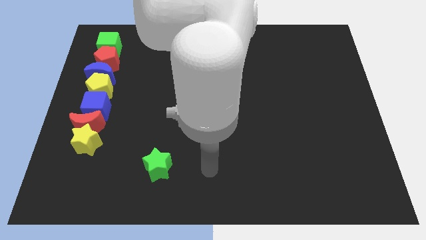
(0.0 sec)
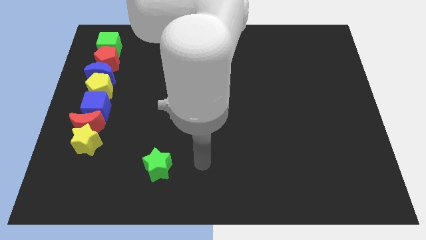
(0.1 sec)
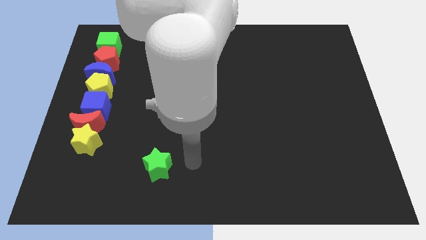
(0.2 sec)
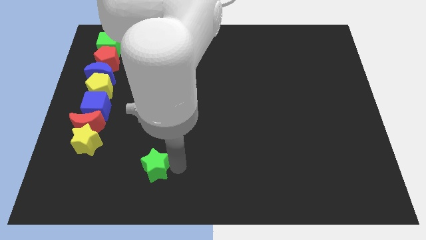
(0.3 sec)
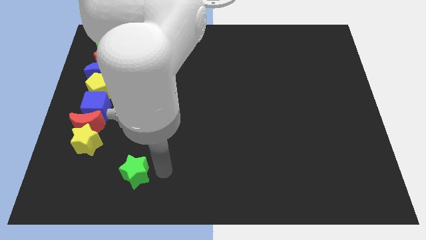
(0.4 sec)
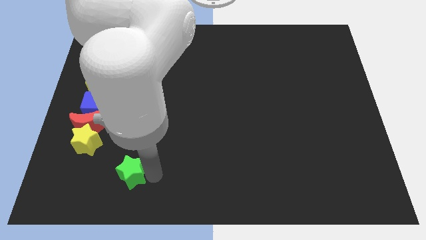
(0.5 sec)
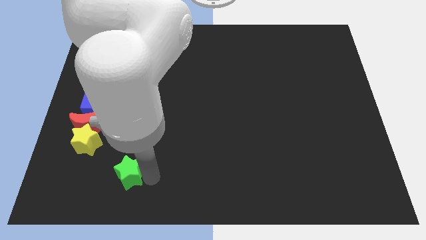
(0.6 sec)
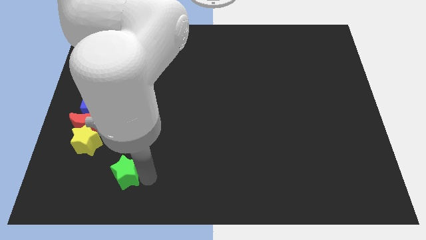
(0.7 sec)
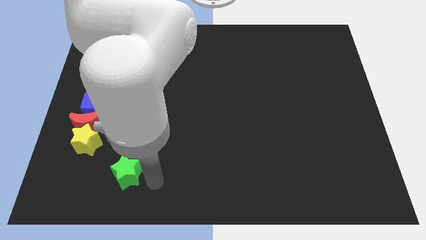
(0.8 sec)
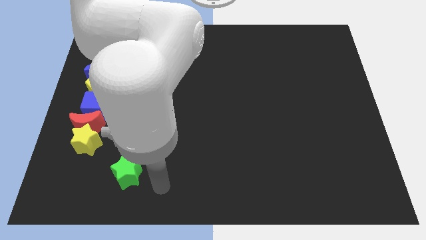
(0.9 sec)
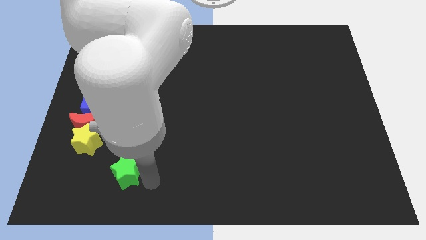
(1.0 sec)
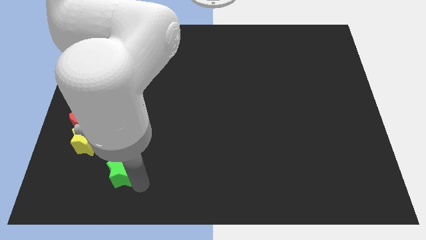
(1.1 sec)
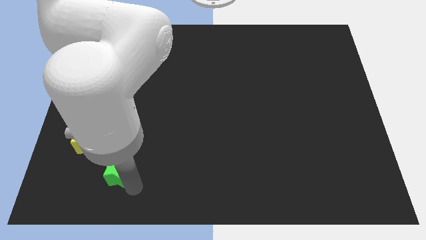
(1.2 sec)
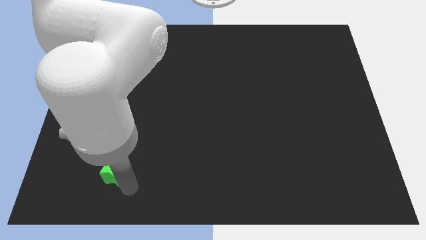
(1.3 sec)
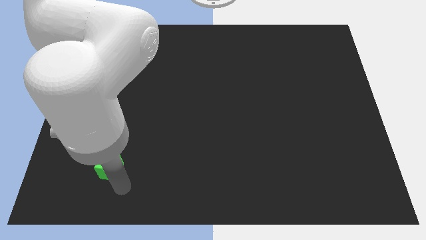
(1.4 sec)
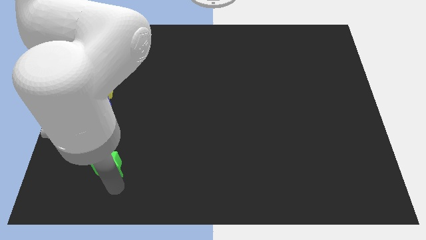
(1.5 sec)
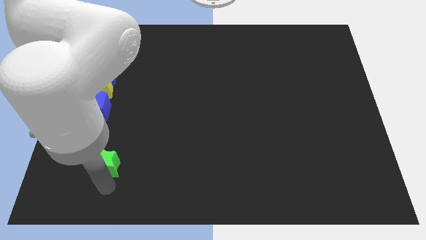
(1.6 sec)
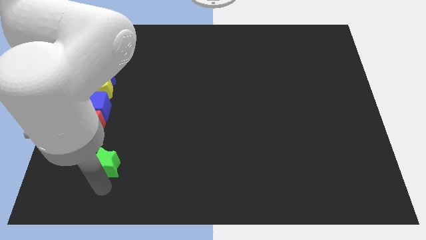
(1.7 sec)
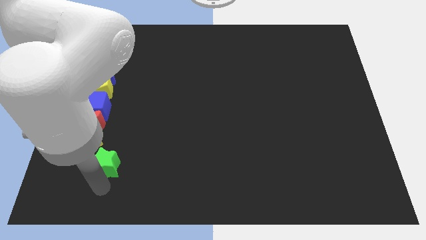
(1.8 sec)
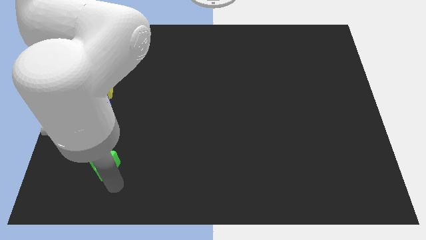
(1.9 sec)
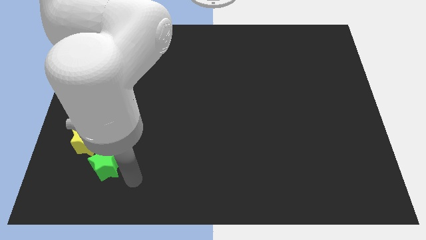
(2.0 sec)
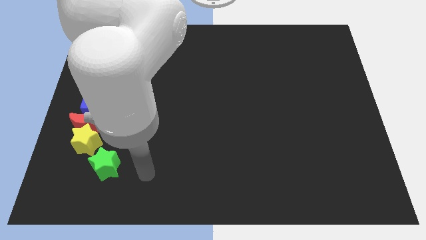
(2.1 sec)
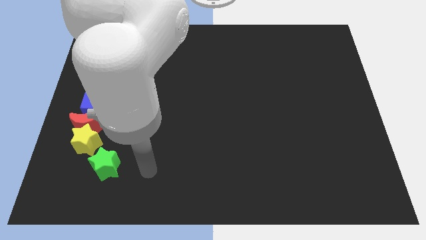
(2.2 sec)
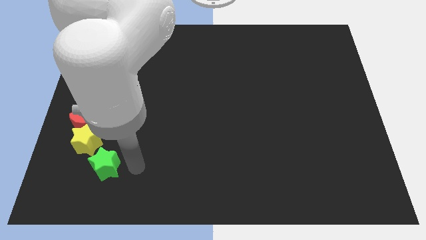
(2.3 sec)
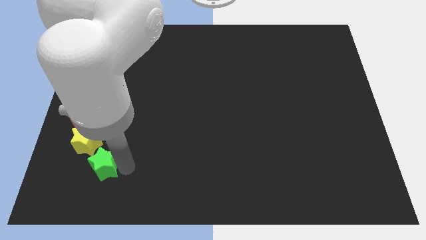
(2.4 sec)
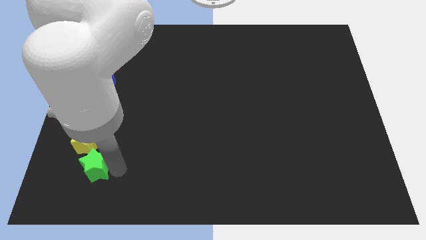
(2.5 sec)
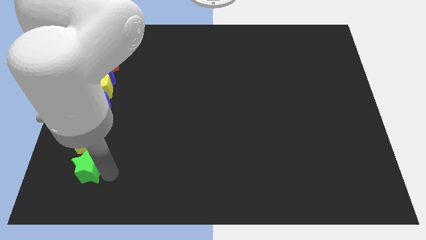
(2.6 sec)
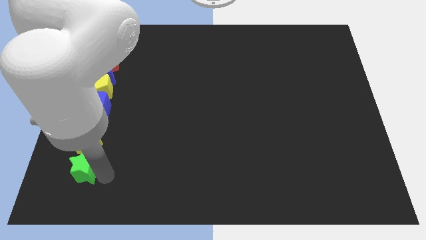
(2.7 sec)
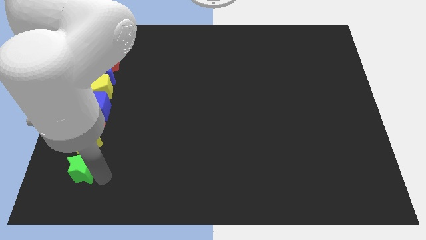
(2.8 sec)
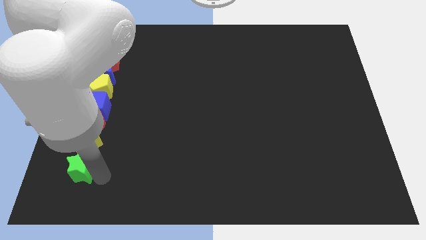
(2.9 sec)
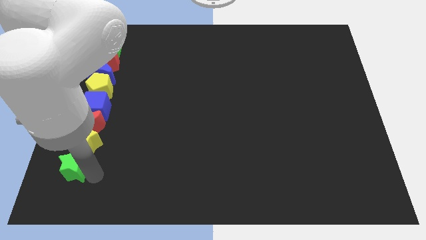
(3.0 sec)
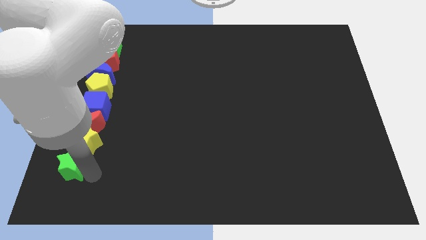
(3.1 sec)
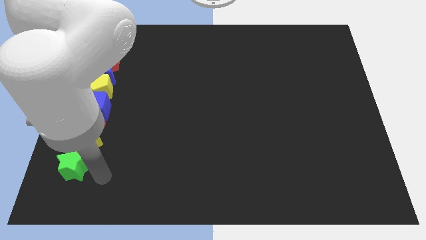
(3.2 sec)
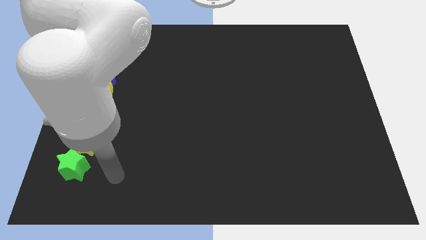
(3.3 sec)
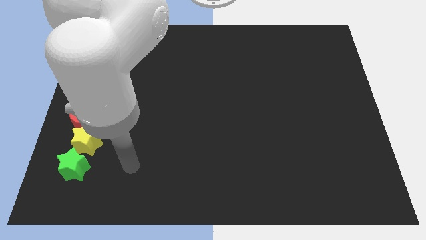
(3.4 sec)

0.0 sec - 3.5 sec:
push the green star to the bottom of the yellow star

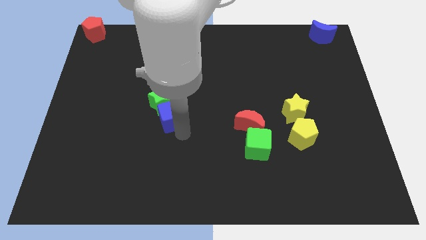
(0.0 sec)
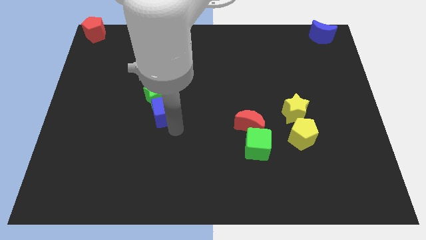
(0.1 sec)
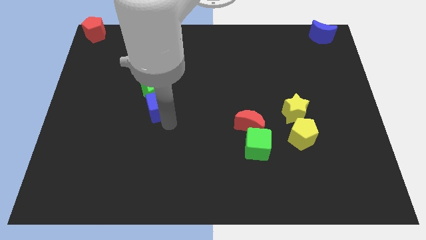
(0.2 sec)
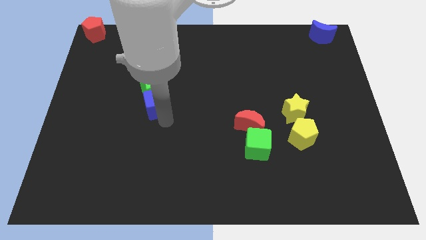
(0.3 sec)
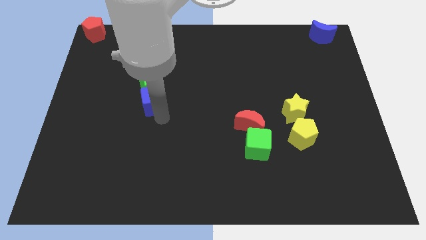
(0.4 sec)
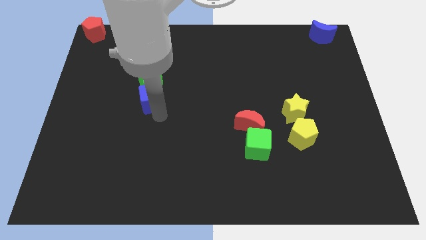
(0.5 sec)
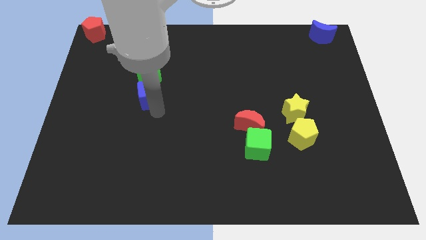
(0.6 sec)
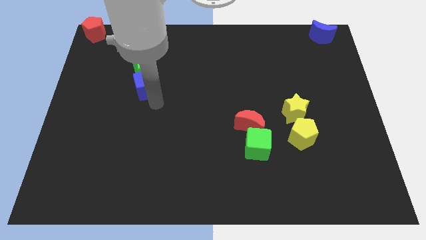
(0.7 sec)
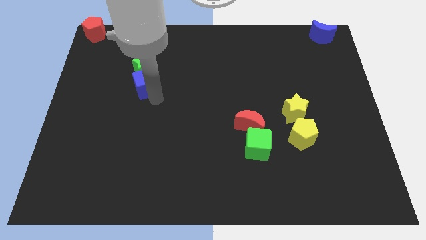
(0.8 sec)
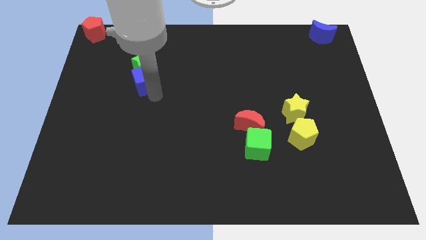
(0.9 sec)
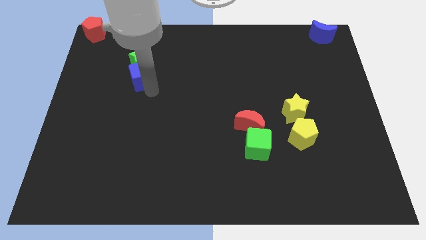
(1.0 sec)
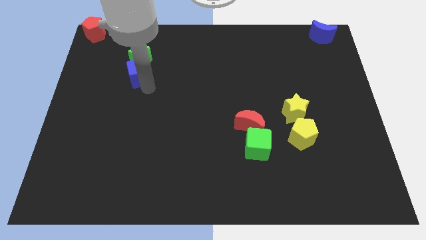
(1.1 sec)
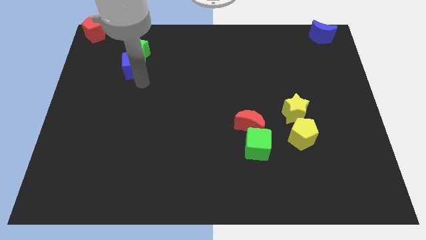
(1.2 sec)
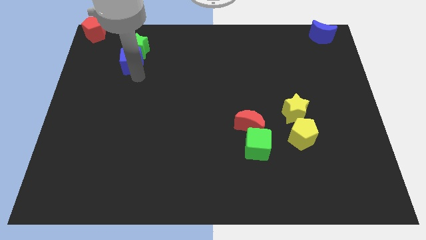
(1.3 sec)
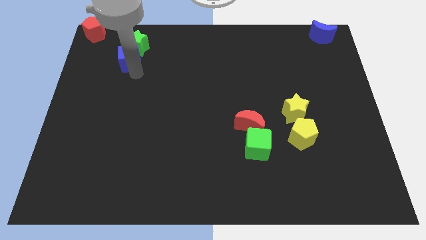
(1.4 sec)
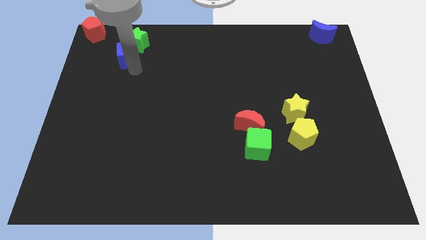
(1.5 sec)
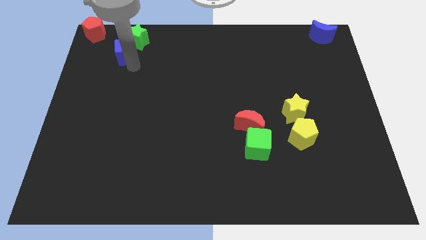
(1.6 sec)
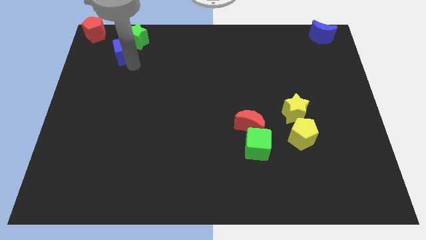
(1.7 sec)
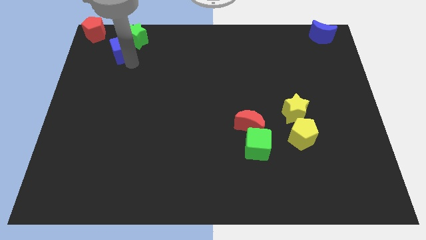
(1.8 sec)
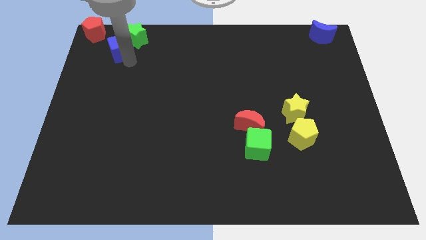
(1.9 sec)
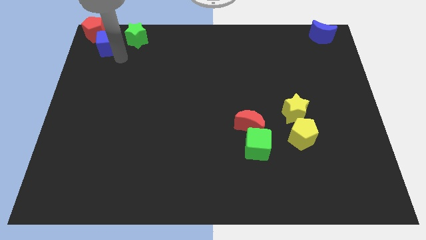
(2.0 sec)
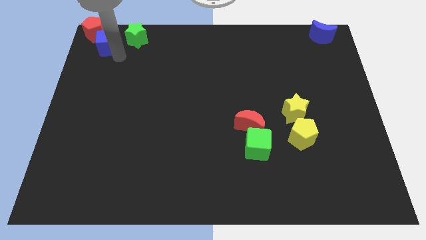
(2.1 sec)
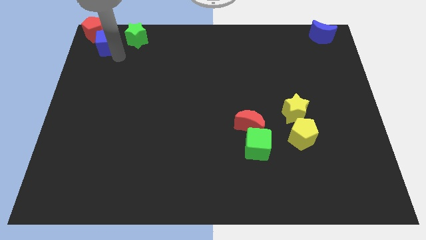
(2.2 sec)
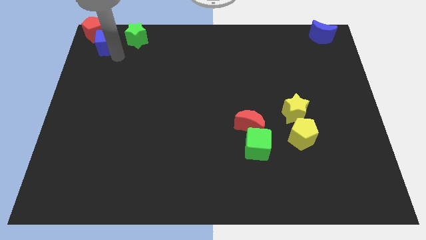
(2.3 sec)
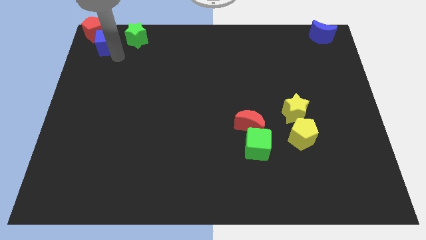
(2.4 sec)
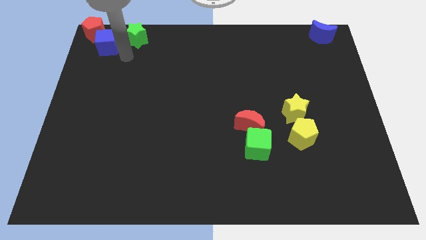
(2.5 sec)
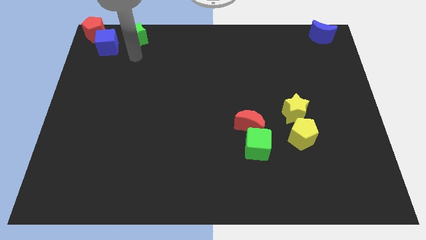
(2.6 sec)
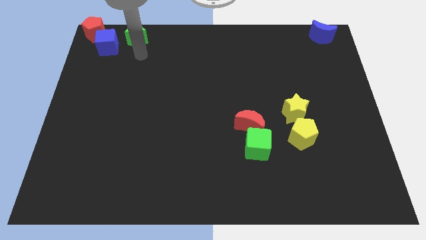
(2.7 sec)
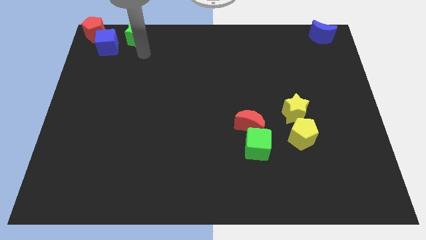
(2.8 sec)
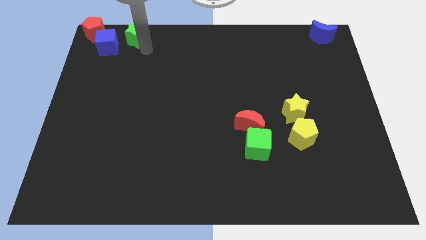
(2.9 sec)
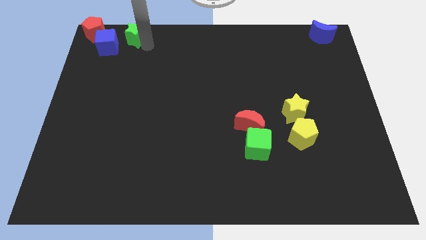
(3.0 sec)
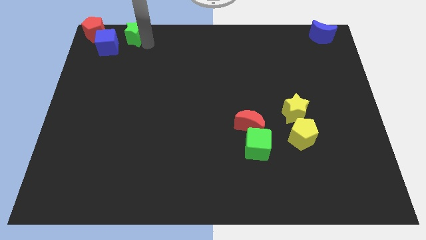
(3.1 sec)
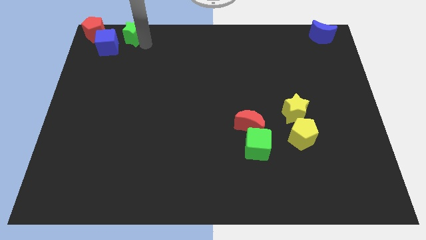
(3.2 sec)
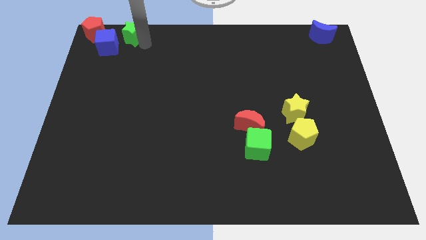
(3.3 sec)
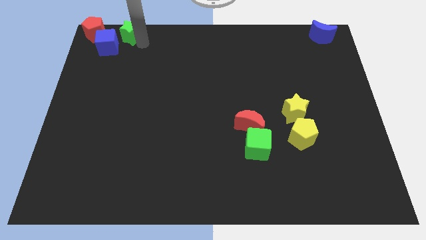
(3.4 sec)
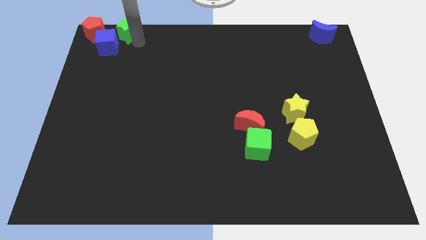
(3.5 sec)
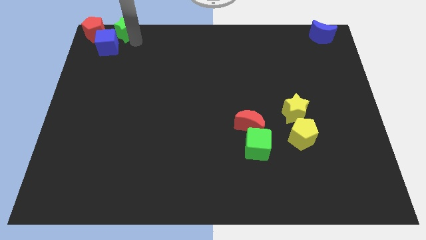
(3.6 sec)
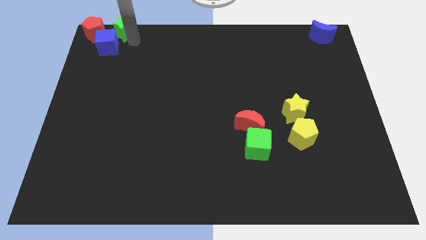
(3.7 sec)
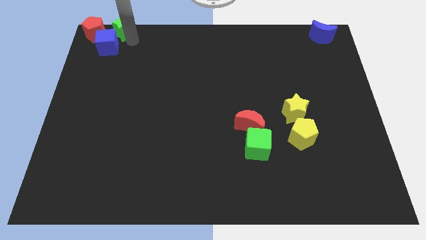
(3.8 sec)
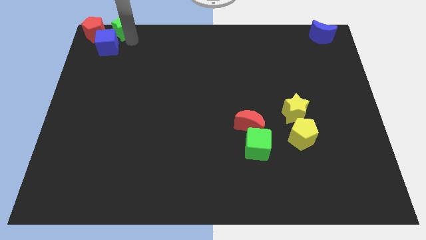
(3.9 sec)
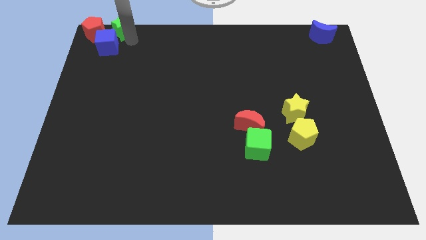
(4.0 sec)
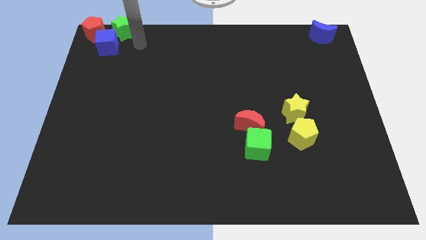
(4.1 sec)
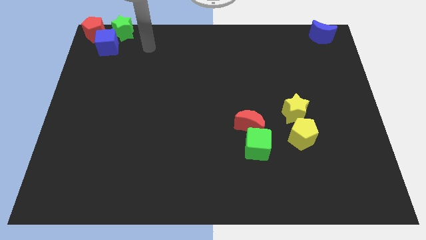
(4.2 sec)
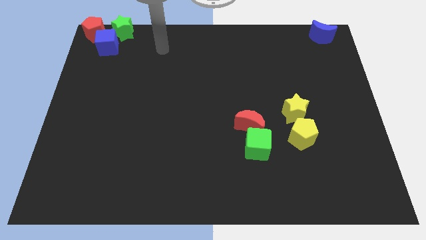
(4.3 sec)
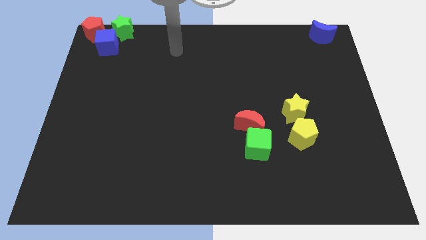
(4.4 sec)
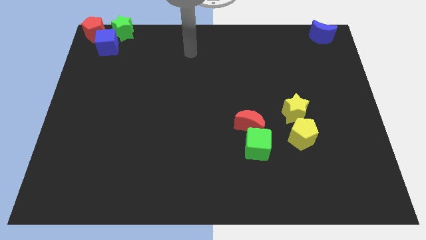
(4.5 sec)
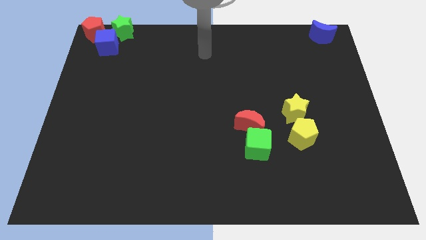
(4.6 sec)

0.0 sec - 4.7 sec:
push the blue cube and green star to the top left side of the board

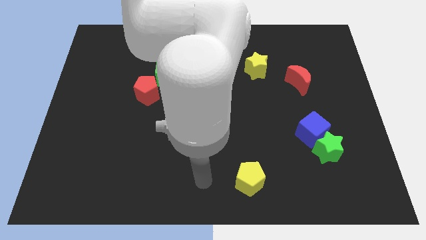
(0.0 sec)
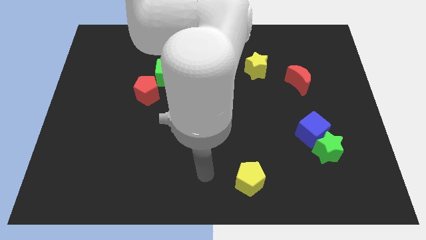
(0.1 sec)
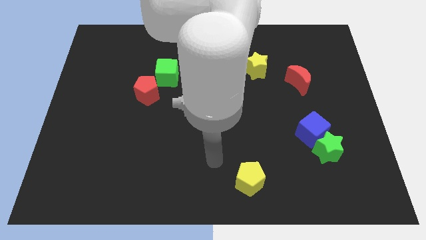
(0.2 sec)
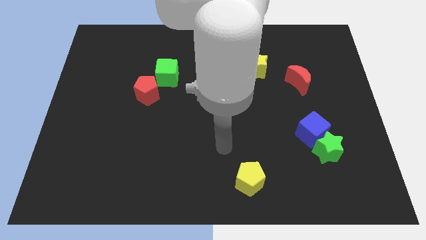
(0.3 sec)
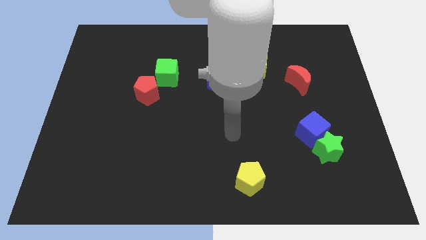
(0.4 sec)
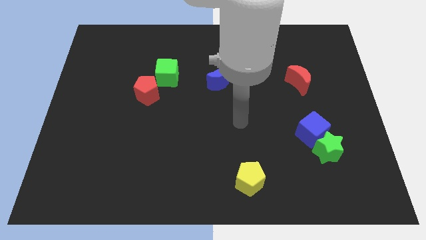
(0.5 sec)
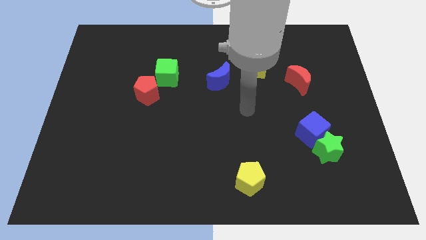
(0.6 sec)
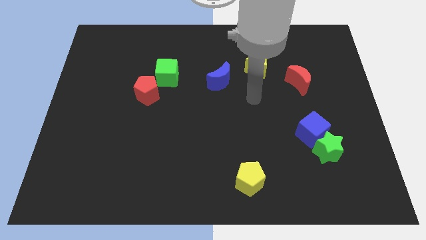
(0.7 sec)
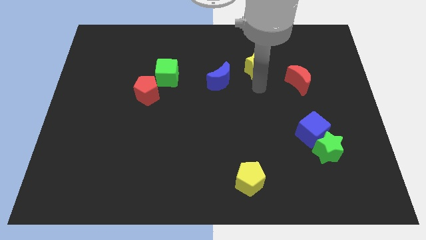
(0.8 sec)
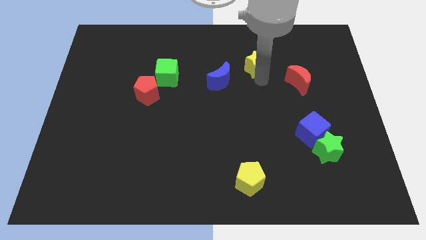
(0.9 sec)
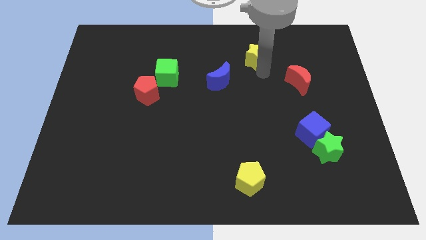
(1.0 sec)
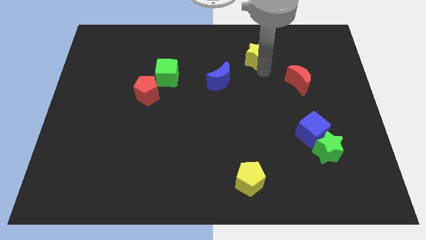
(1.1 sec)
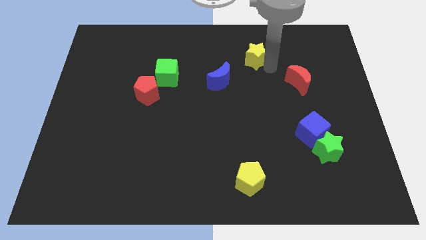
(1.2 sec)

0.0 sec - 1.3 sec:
push yellow star towards the top of the board
